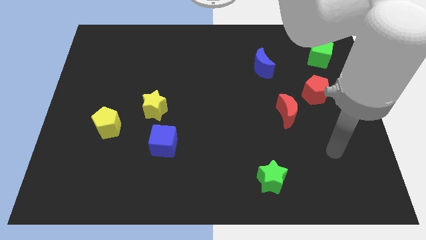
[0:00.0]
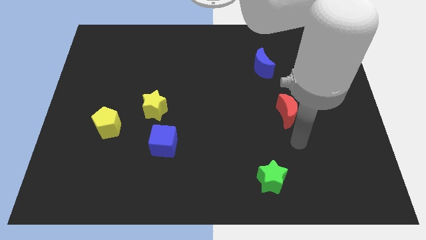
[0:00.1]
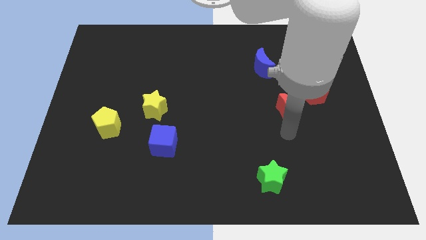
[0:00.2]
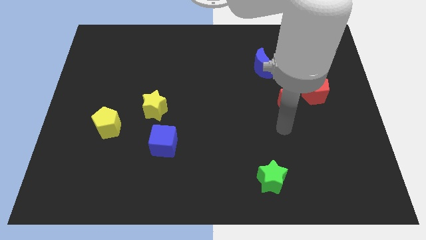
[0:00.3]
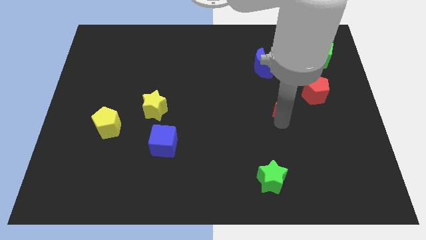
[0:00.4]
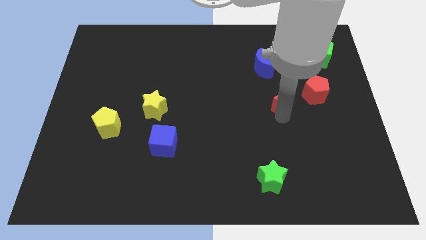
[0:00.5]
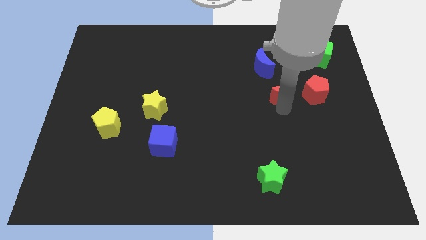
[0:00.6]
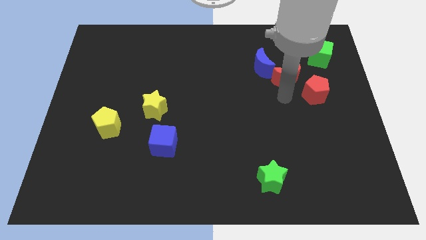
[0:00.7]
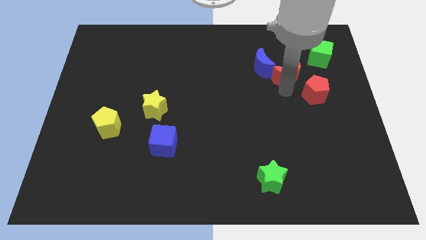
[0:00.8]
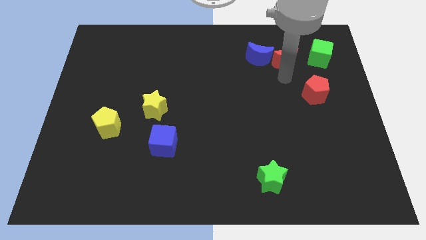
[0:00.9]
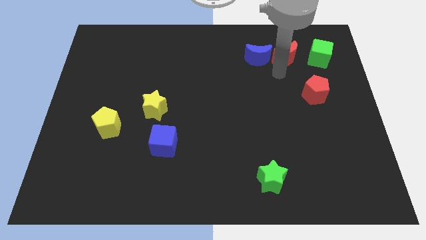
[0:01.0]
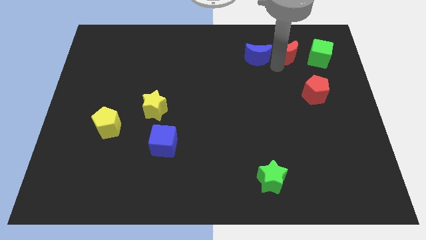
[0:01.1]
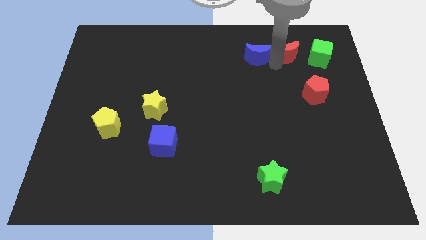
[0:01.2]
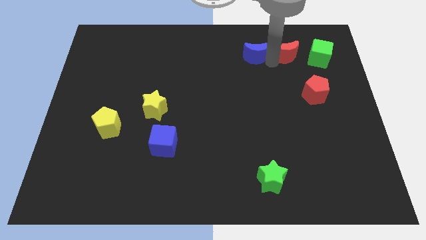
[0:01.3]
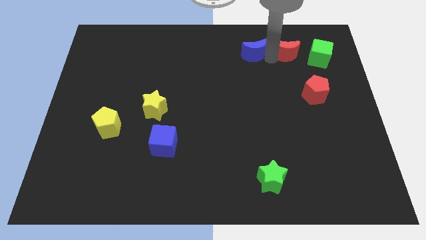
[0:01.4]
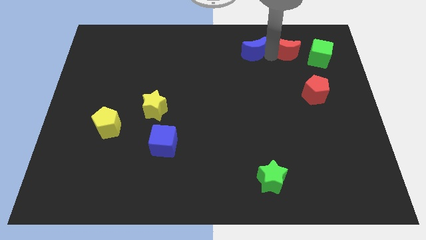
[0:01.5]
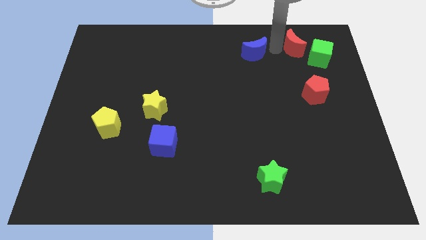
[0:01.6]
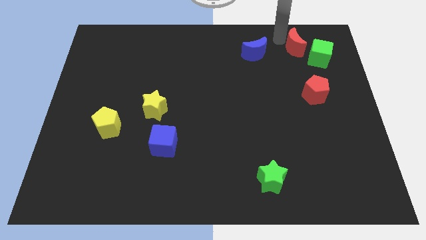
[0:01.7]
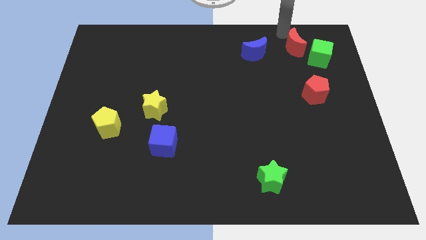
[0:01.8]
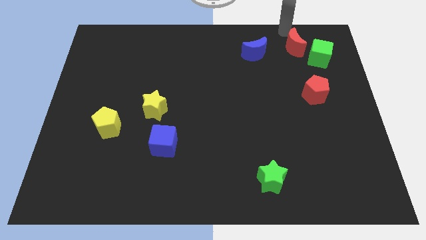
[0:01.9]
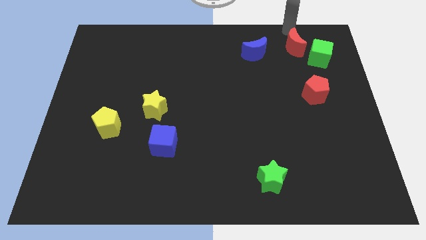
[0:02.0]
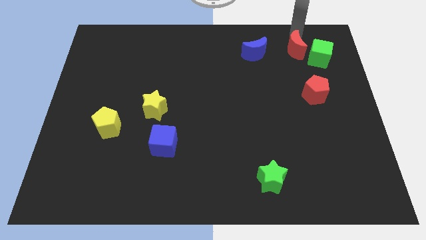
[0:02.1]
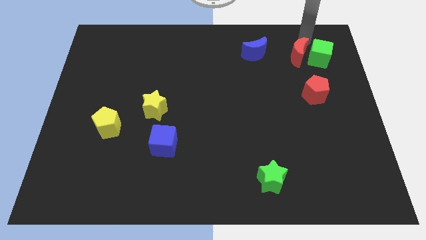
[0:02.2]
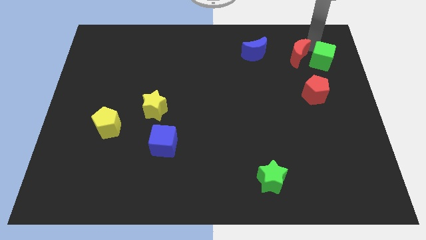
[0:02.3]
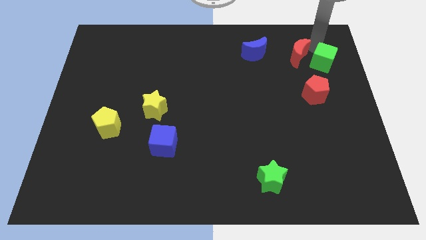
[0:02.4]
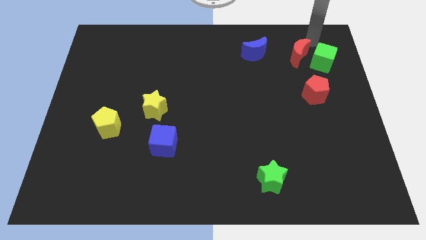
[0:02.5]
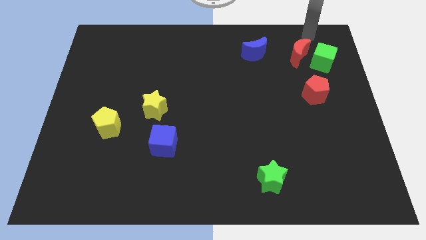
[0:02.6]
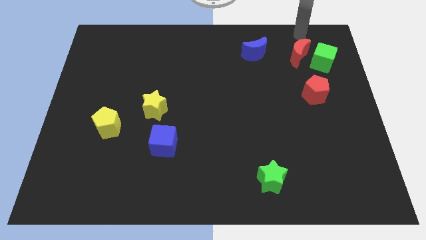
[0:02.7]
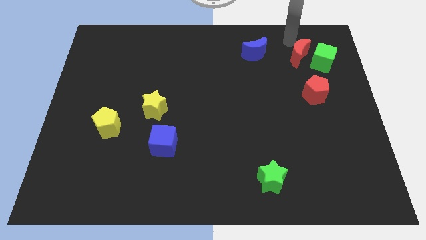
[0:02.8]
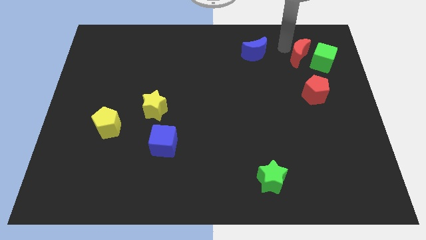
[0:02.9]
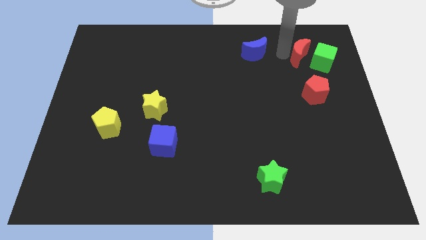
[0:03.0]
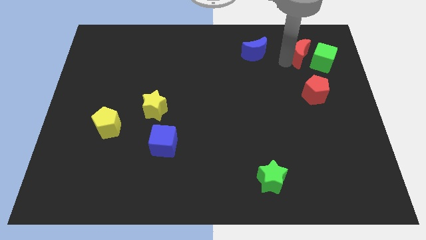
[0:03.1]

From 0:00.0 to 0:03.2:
push the red moon close to the green cube

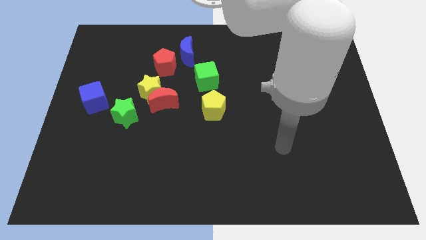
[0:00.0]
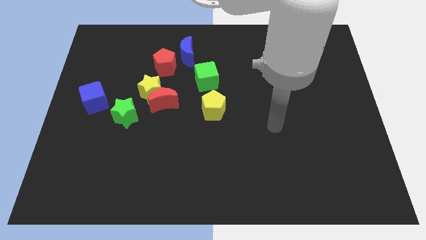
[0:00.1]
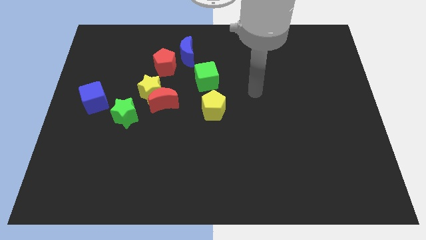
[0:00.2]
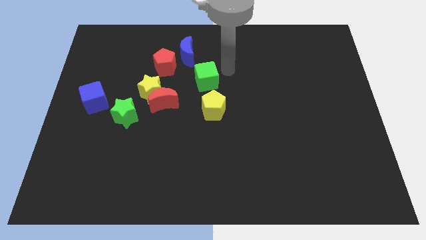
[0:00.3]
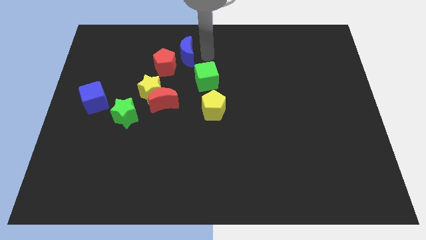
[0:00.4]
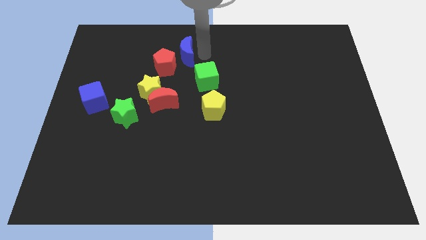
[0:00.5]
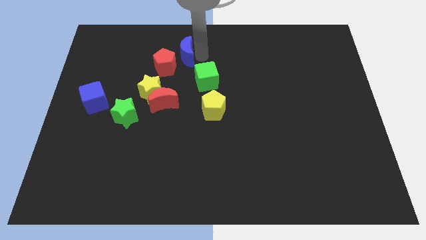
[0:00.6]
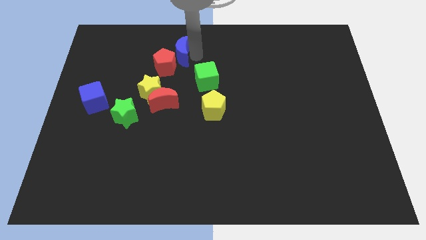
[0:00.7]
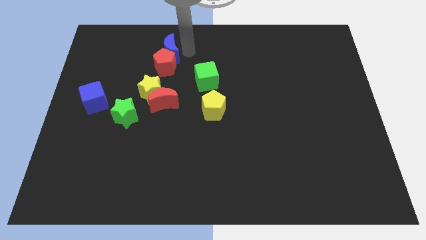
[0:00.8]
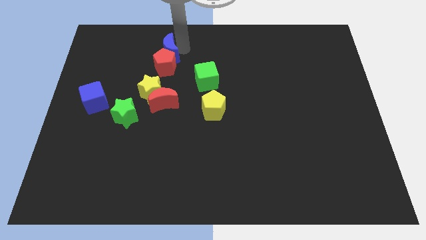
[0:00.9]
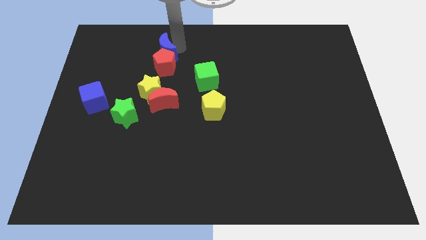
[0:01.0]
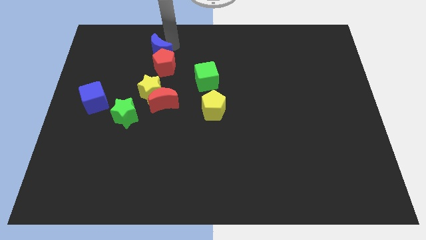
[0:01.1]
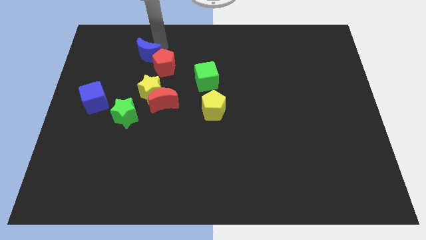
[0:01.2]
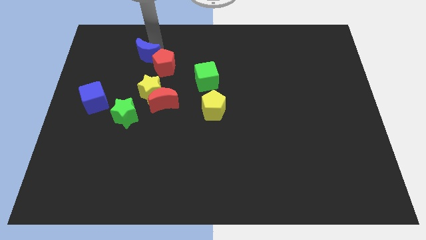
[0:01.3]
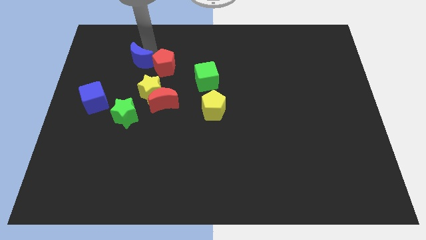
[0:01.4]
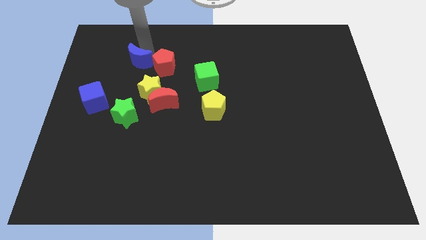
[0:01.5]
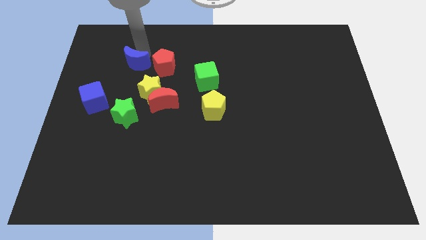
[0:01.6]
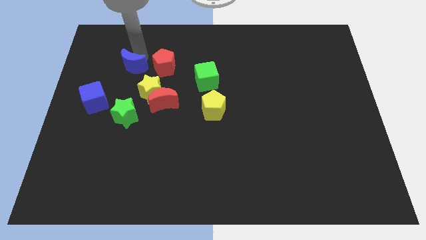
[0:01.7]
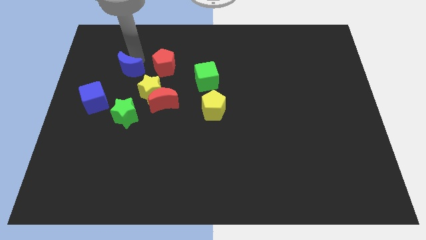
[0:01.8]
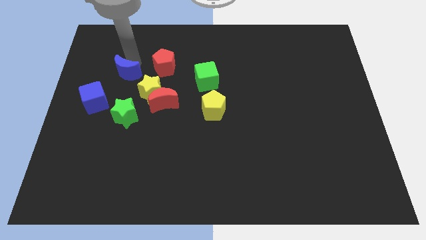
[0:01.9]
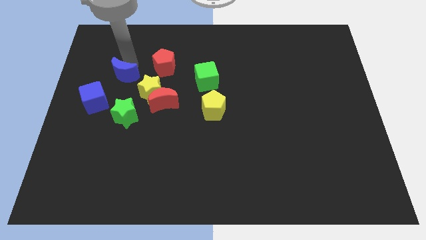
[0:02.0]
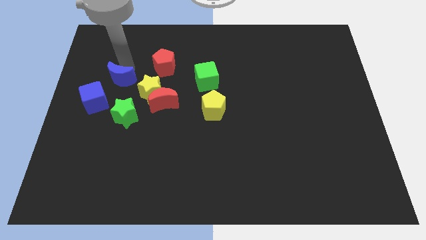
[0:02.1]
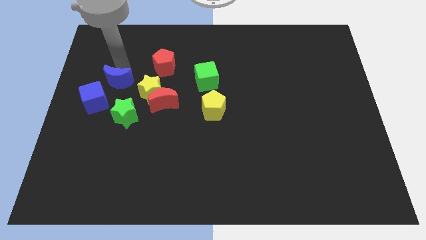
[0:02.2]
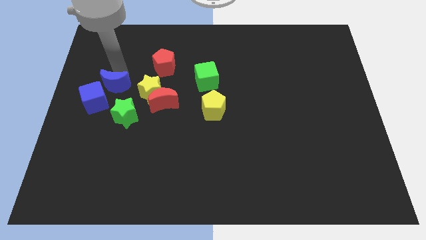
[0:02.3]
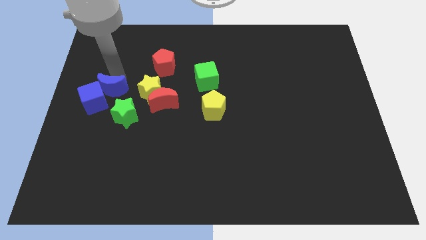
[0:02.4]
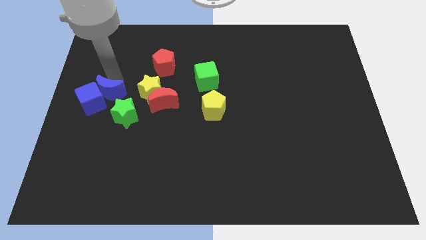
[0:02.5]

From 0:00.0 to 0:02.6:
put the blue moon to the blue cube

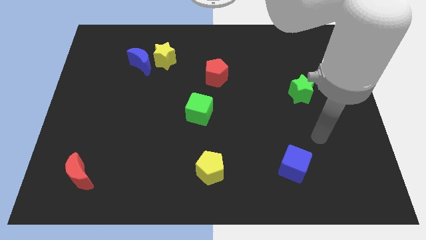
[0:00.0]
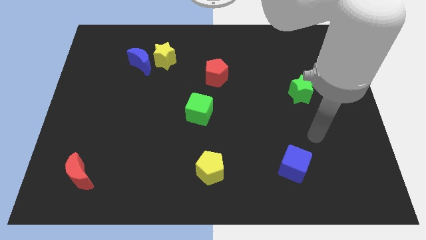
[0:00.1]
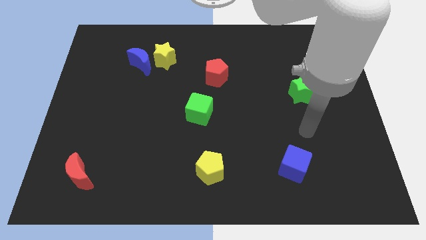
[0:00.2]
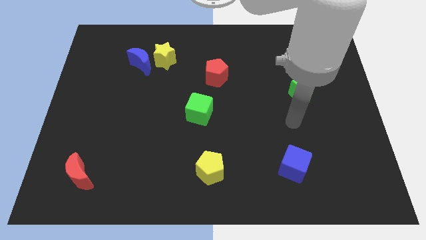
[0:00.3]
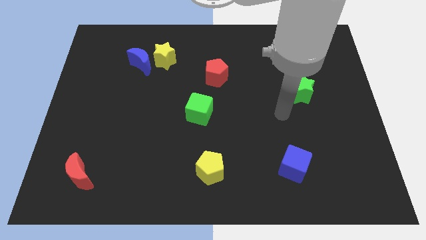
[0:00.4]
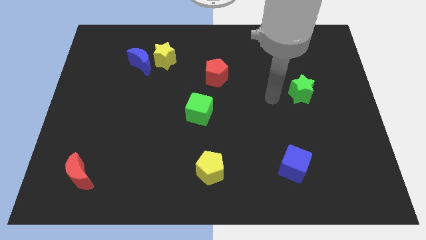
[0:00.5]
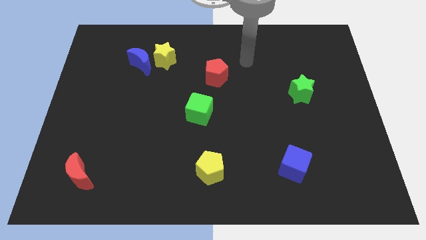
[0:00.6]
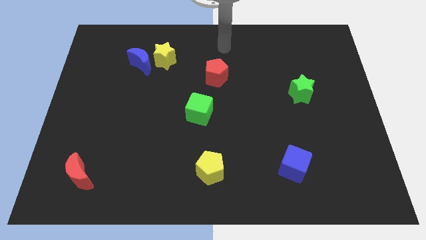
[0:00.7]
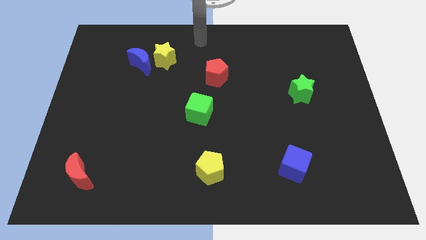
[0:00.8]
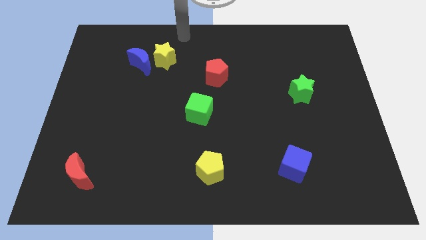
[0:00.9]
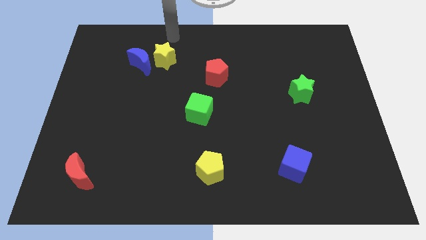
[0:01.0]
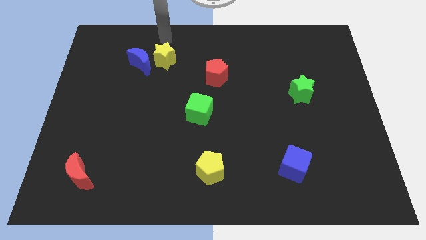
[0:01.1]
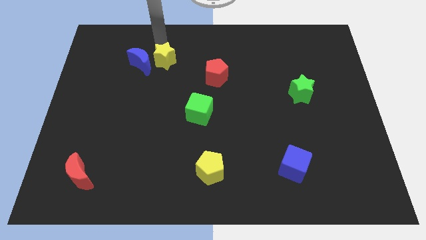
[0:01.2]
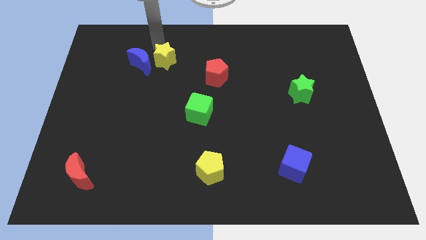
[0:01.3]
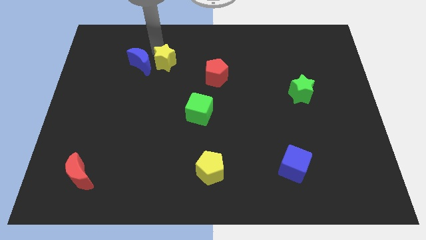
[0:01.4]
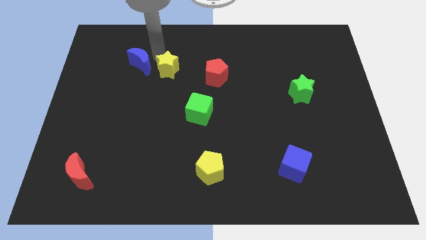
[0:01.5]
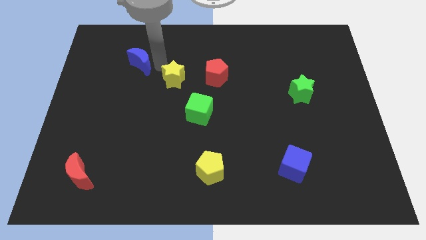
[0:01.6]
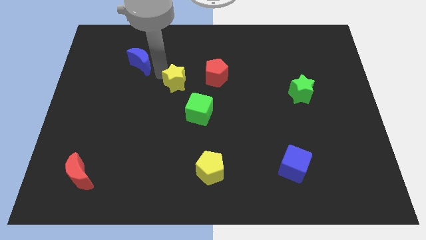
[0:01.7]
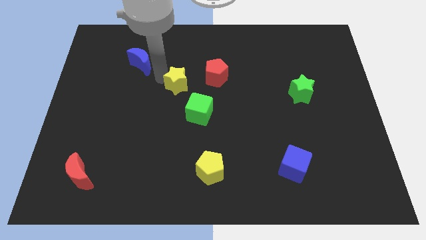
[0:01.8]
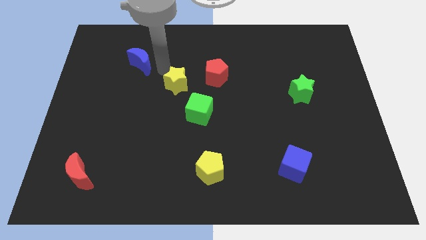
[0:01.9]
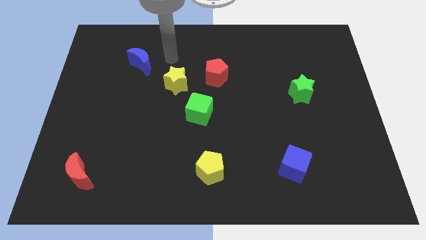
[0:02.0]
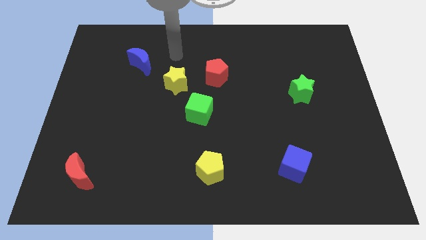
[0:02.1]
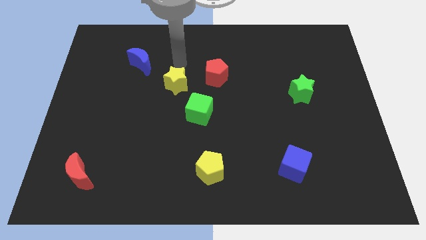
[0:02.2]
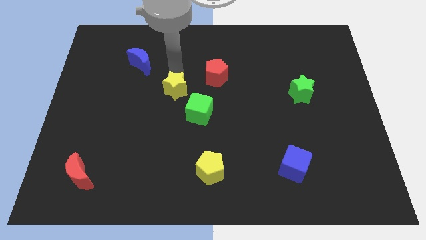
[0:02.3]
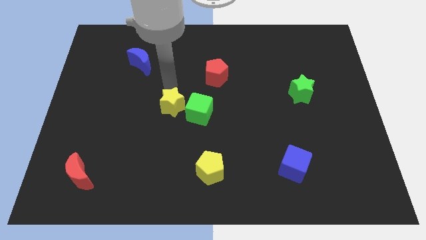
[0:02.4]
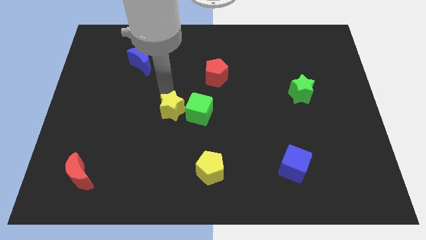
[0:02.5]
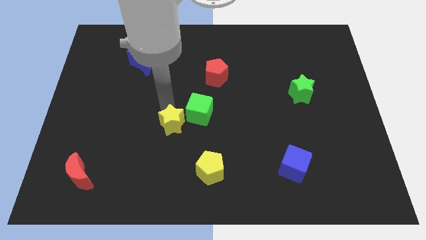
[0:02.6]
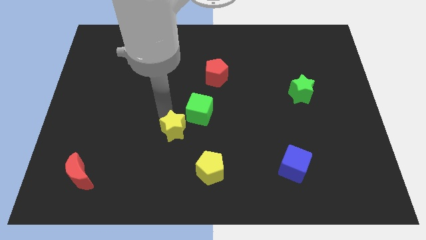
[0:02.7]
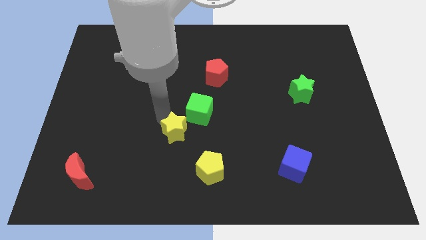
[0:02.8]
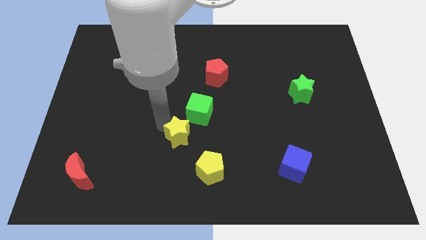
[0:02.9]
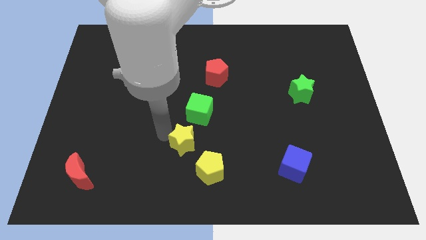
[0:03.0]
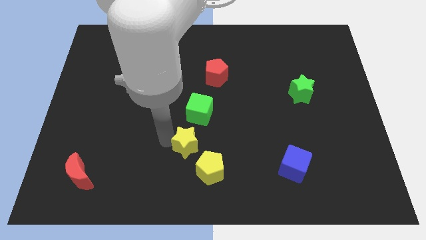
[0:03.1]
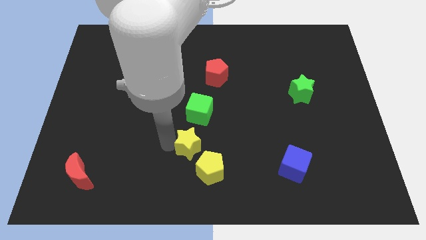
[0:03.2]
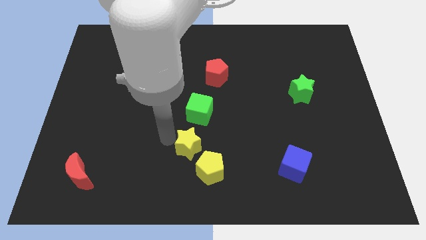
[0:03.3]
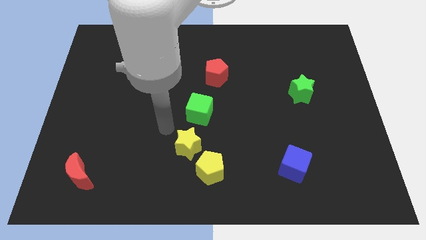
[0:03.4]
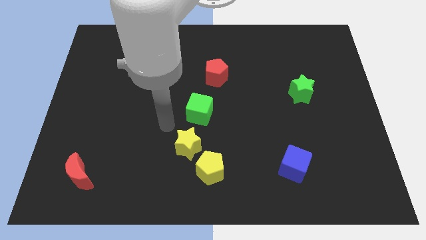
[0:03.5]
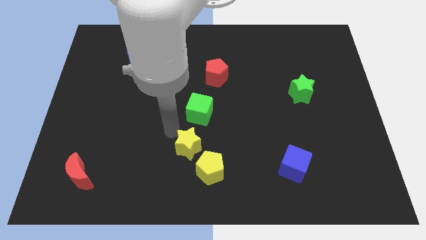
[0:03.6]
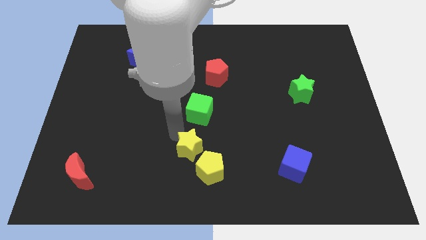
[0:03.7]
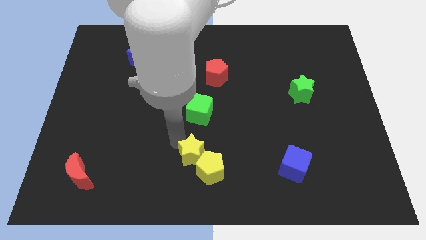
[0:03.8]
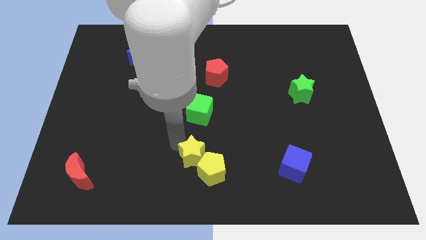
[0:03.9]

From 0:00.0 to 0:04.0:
push the yellow star to the yellow pentagon
